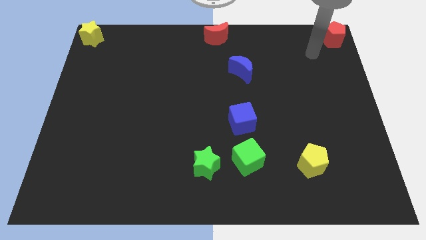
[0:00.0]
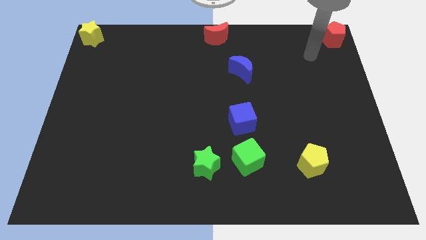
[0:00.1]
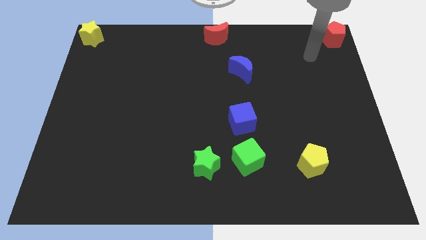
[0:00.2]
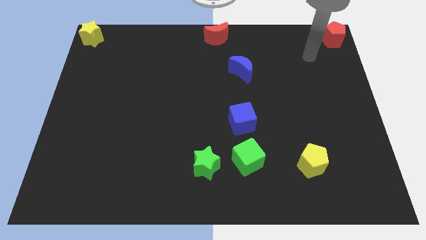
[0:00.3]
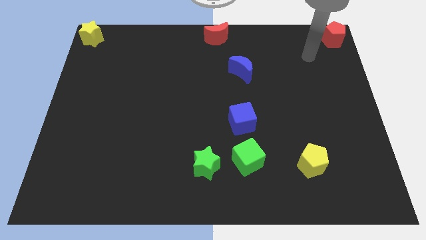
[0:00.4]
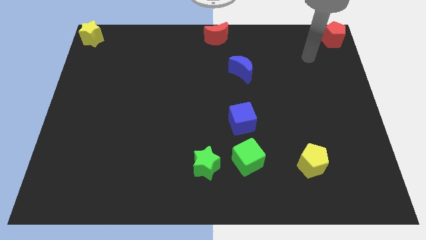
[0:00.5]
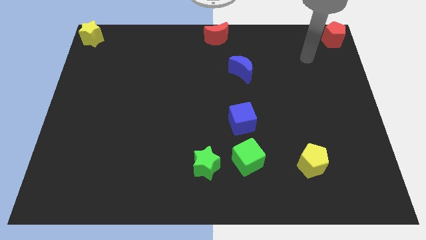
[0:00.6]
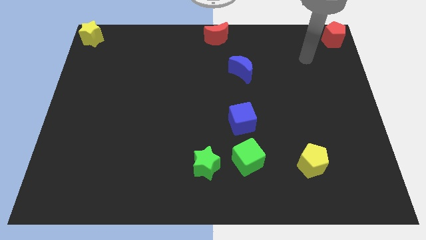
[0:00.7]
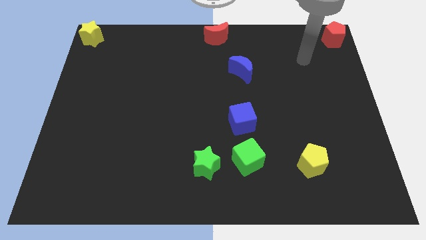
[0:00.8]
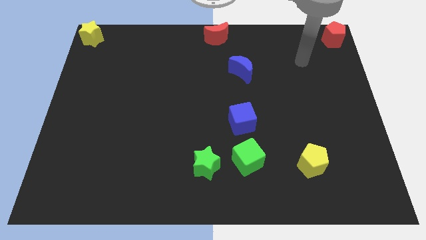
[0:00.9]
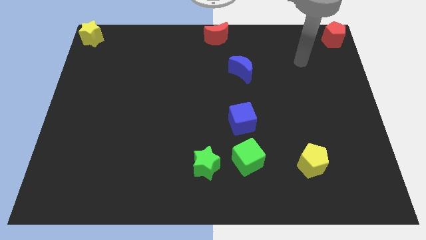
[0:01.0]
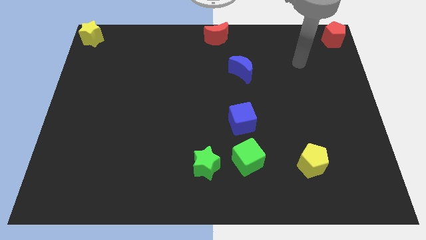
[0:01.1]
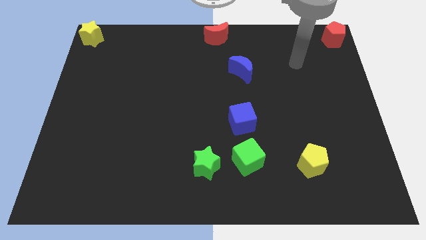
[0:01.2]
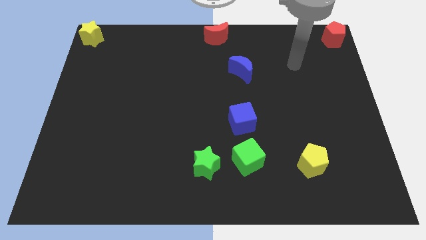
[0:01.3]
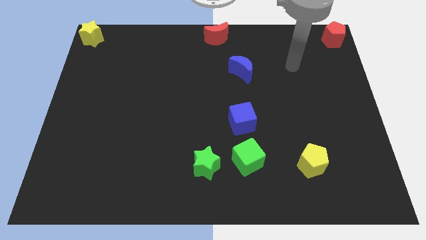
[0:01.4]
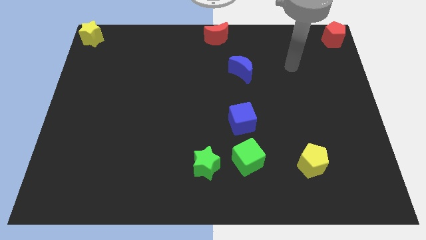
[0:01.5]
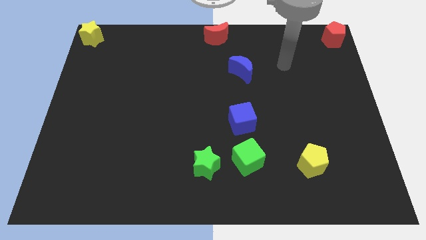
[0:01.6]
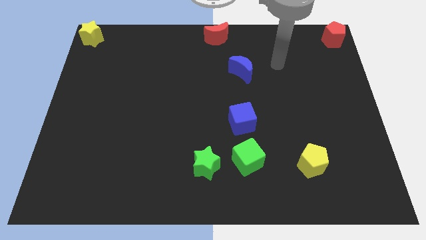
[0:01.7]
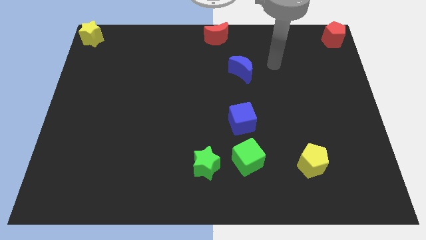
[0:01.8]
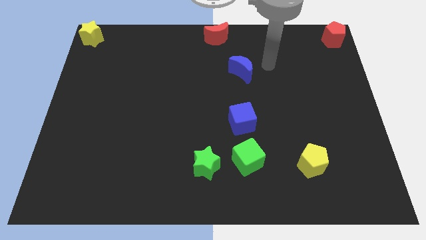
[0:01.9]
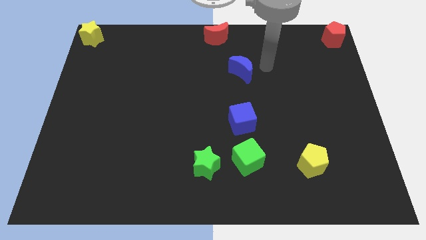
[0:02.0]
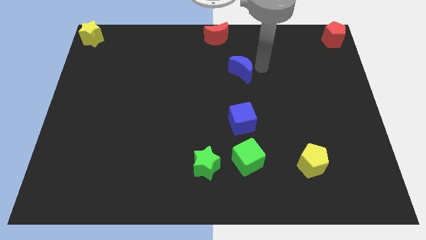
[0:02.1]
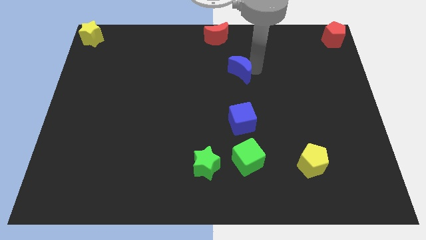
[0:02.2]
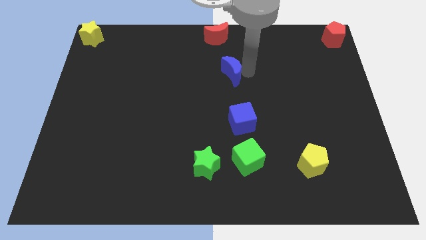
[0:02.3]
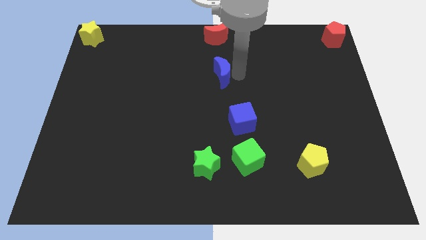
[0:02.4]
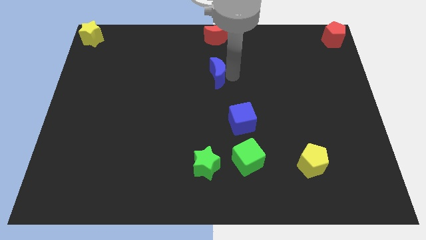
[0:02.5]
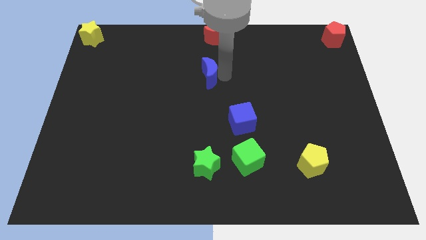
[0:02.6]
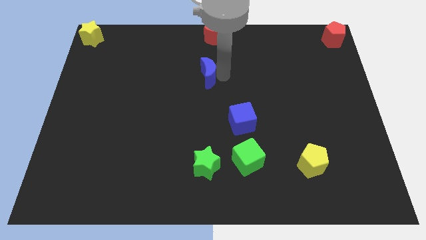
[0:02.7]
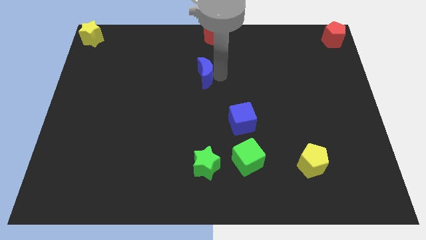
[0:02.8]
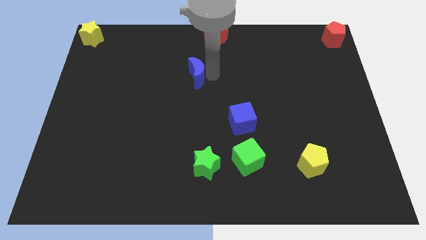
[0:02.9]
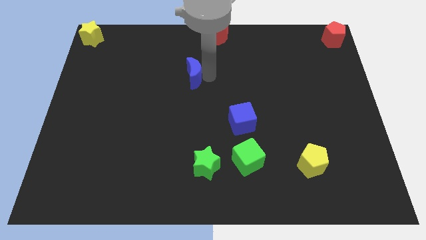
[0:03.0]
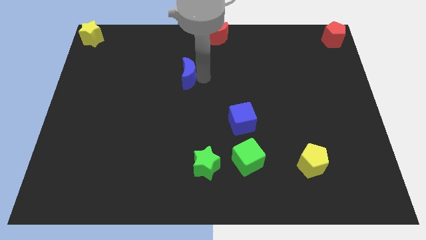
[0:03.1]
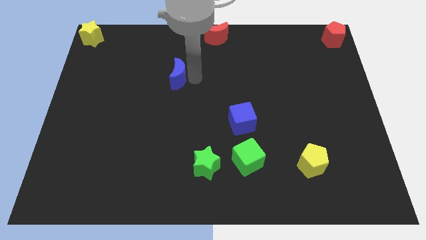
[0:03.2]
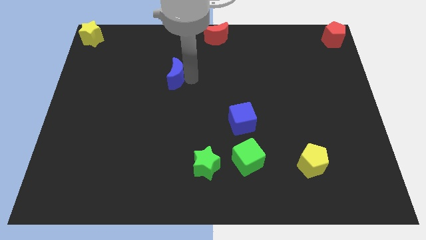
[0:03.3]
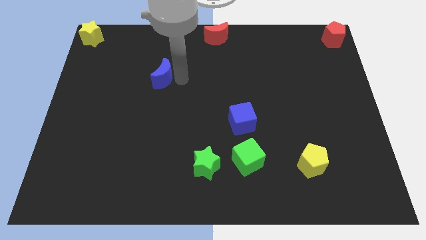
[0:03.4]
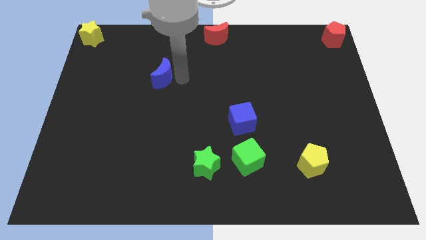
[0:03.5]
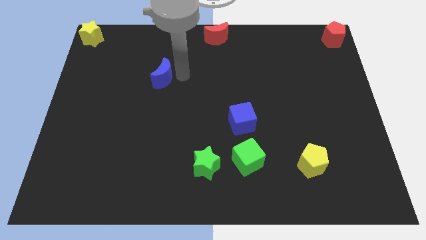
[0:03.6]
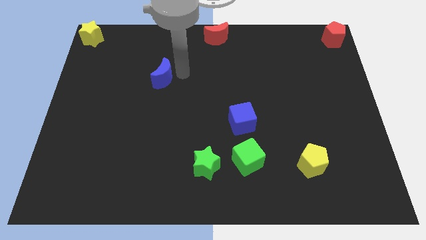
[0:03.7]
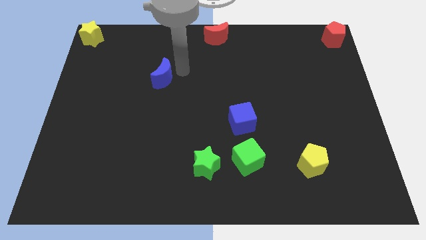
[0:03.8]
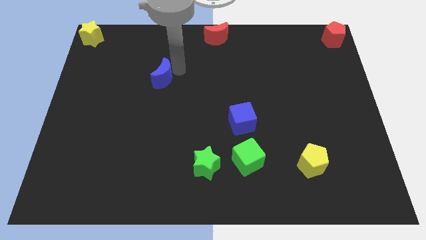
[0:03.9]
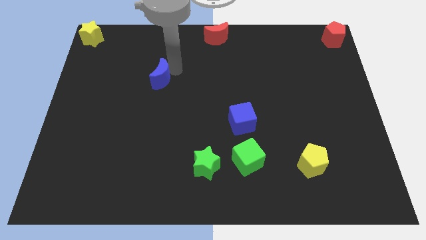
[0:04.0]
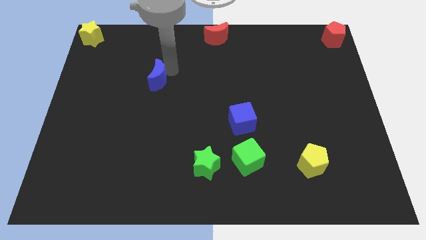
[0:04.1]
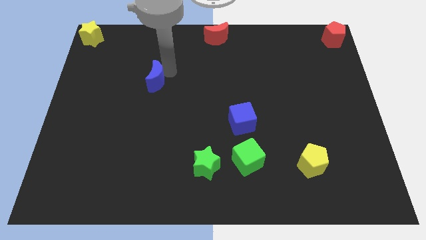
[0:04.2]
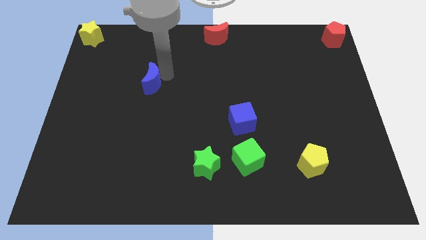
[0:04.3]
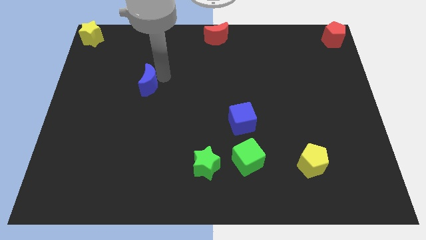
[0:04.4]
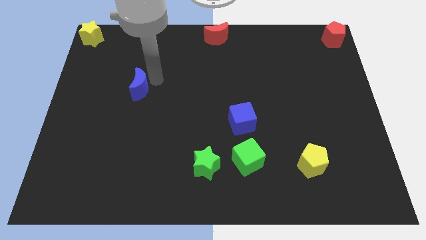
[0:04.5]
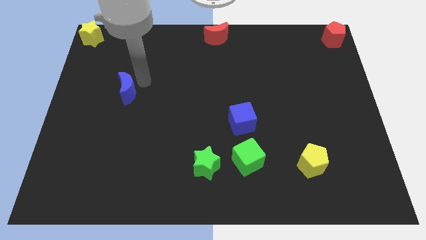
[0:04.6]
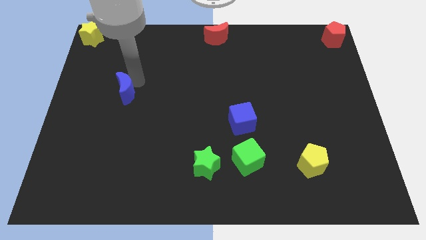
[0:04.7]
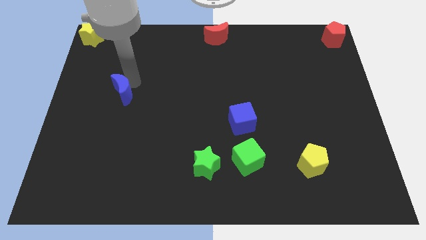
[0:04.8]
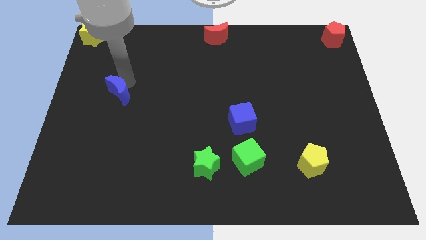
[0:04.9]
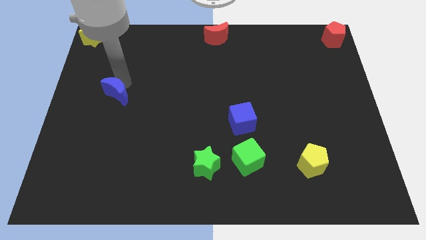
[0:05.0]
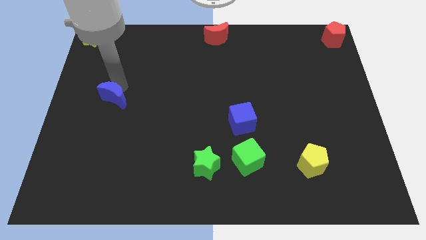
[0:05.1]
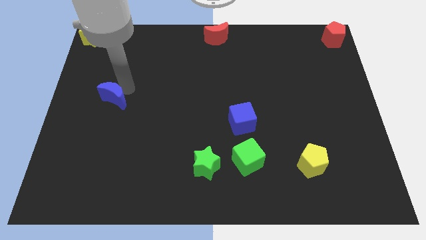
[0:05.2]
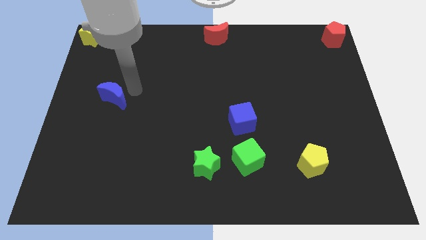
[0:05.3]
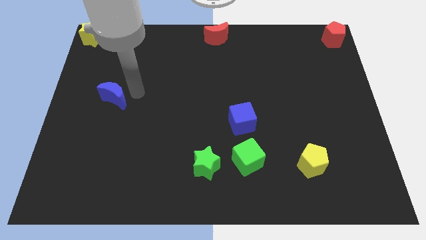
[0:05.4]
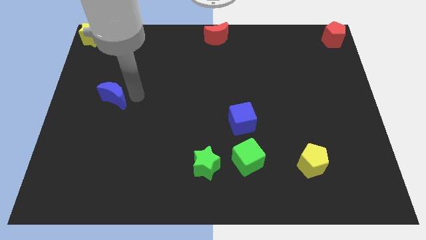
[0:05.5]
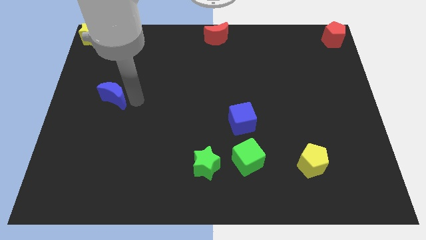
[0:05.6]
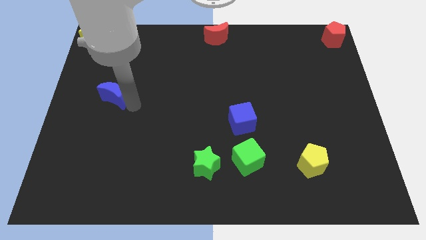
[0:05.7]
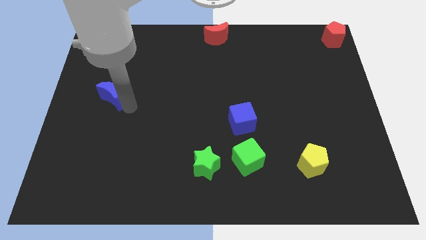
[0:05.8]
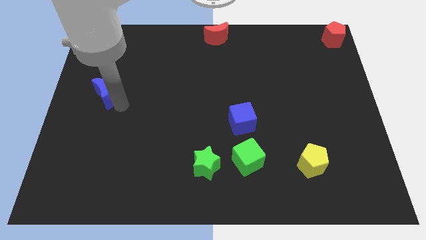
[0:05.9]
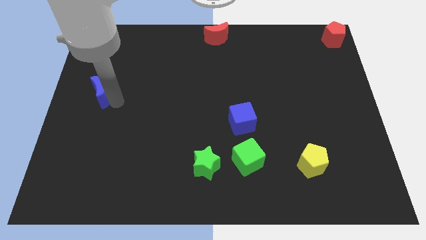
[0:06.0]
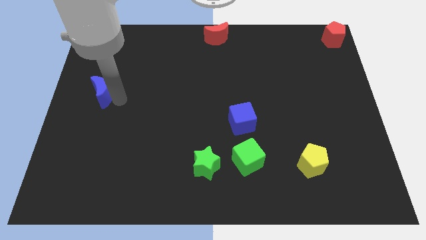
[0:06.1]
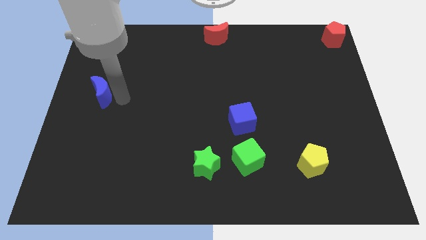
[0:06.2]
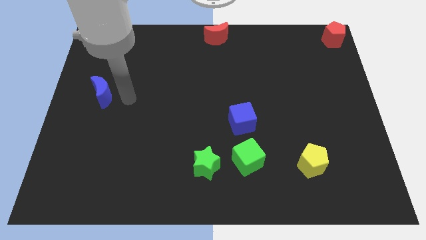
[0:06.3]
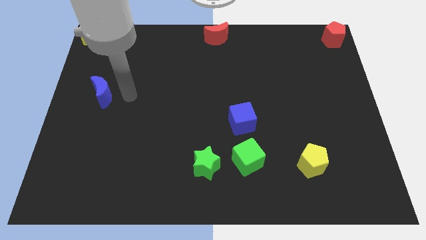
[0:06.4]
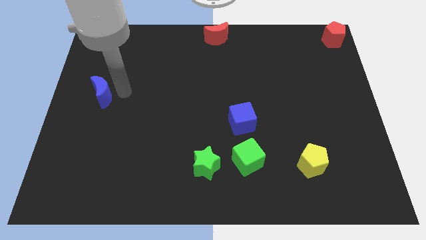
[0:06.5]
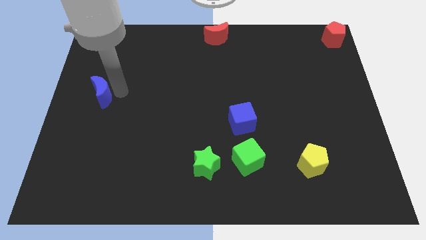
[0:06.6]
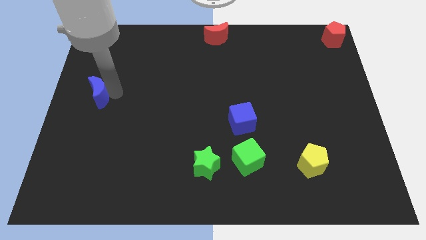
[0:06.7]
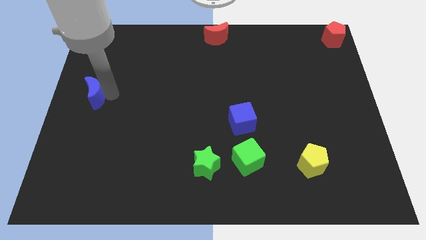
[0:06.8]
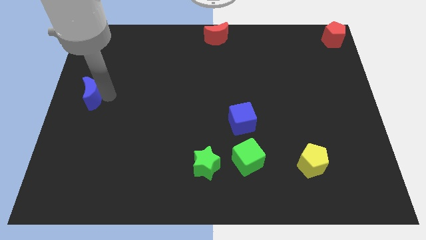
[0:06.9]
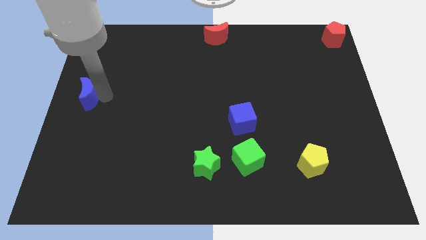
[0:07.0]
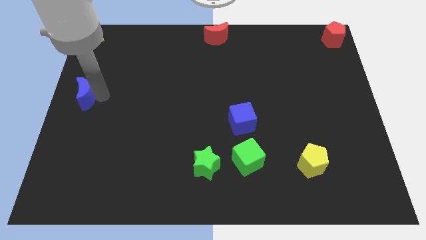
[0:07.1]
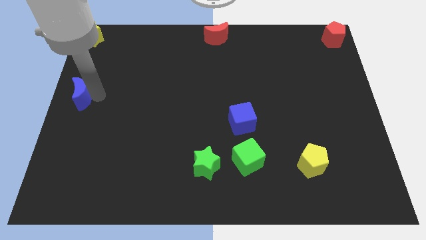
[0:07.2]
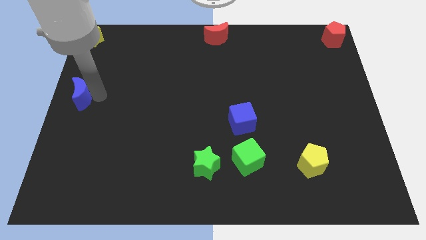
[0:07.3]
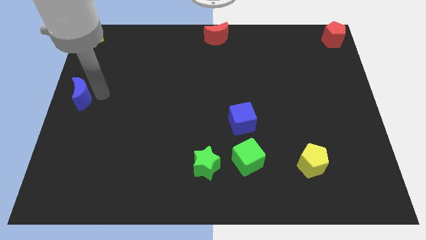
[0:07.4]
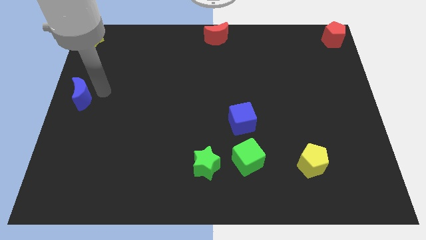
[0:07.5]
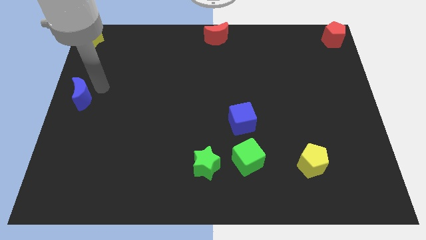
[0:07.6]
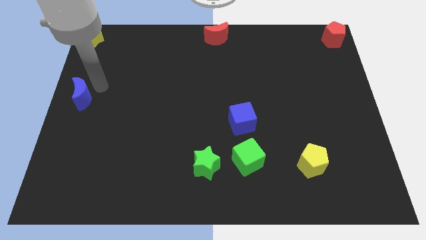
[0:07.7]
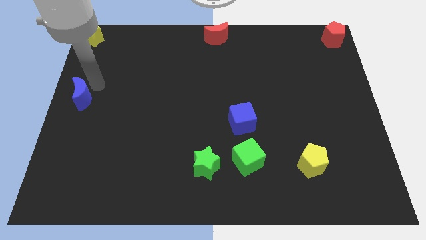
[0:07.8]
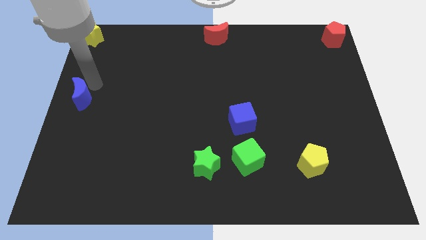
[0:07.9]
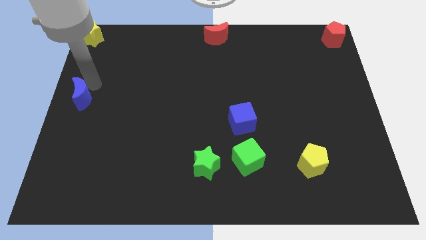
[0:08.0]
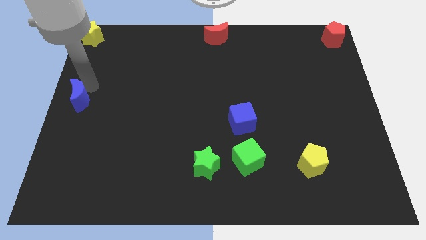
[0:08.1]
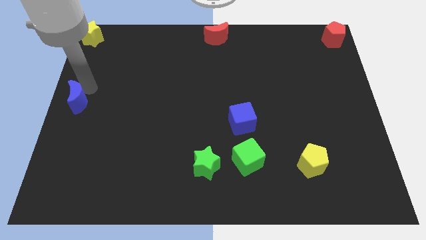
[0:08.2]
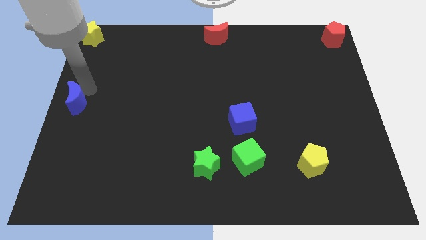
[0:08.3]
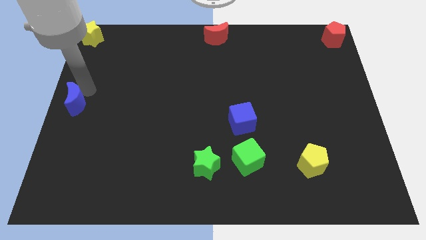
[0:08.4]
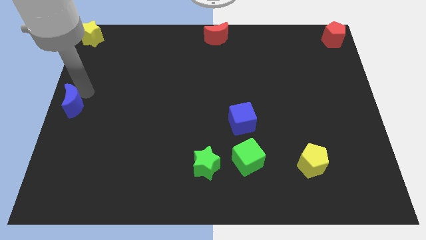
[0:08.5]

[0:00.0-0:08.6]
move the blue crescent to left center of the board

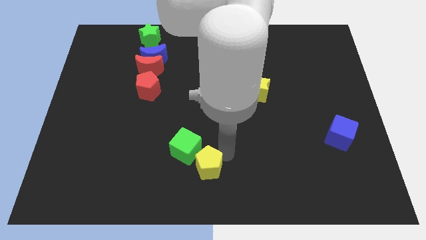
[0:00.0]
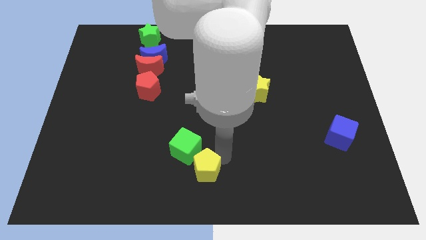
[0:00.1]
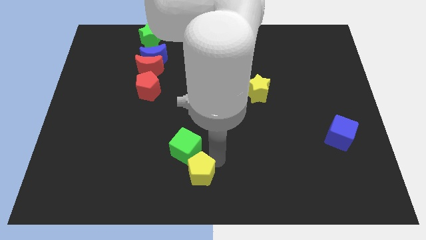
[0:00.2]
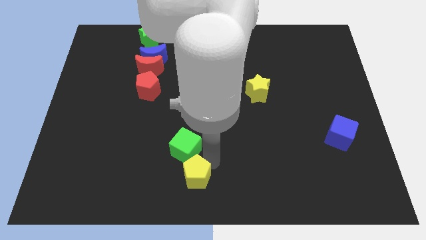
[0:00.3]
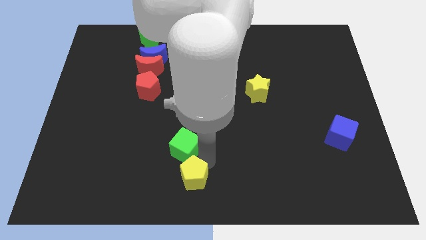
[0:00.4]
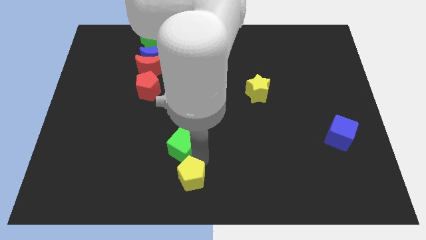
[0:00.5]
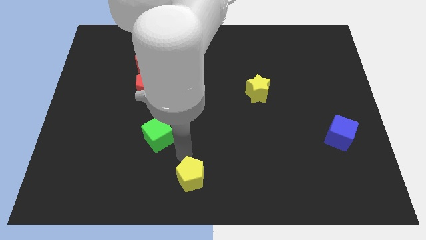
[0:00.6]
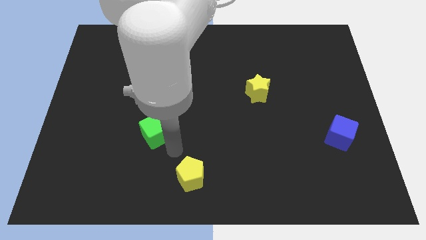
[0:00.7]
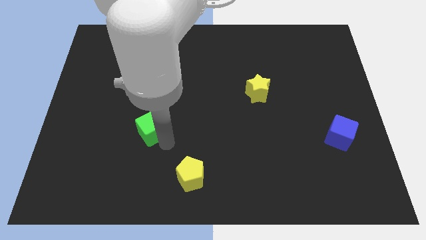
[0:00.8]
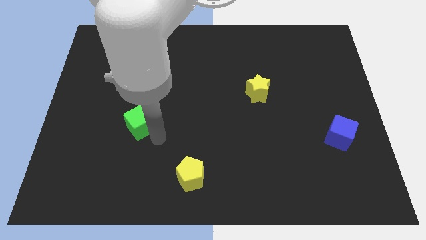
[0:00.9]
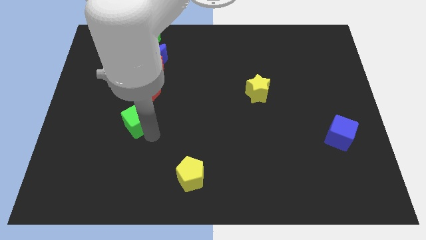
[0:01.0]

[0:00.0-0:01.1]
separate the yellow pentagon and the green cube
